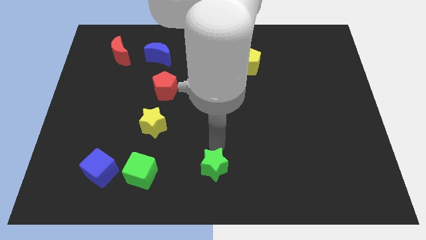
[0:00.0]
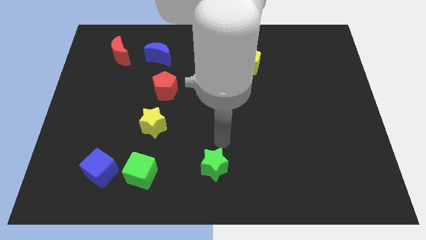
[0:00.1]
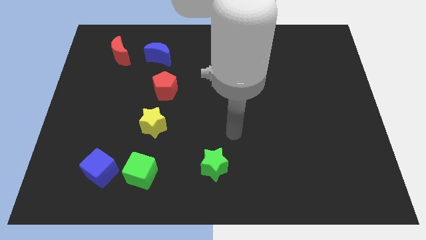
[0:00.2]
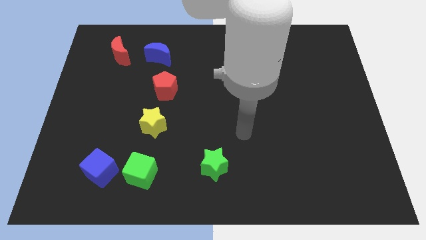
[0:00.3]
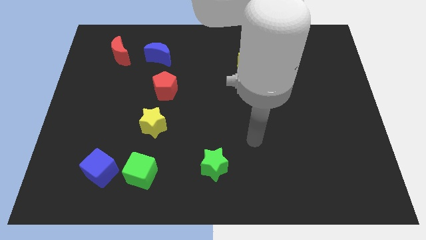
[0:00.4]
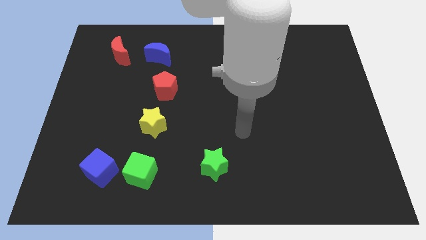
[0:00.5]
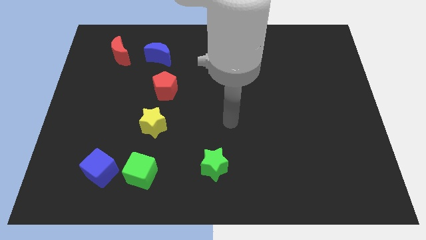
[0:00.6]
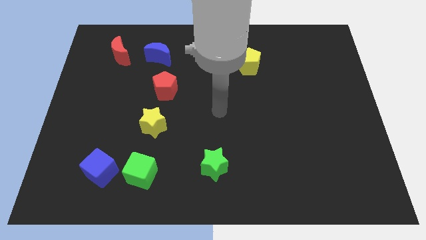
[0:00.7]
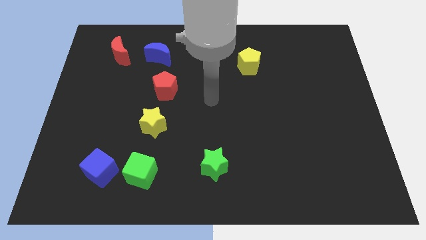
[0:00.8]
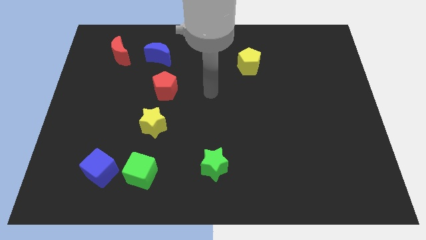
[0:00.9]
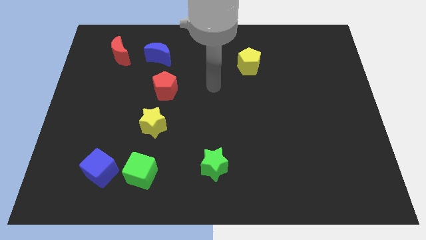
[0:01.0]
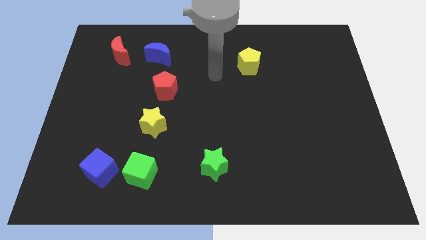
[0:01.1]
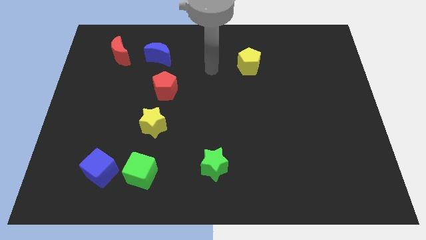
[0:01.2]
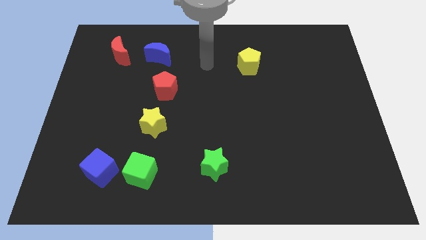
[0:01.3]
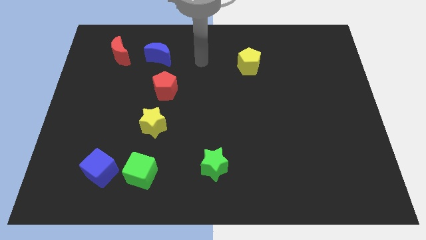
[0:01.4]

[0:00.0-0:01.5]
move your arm away from the green star

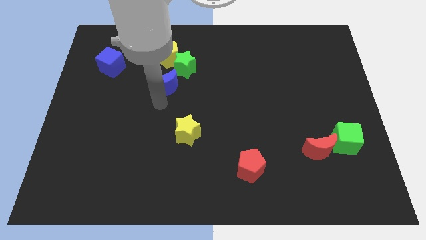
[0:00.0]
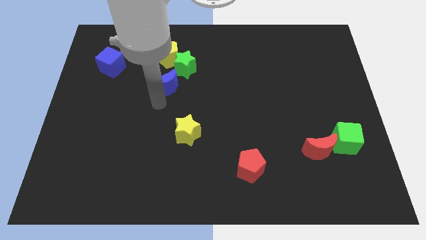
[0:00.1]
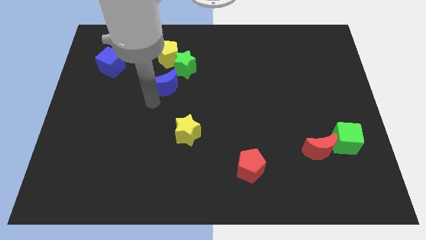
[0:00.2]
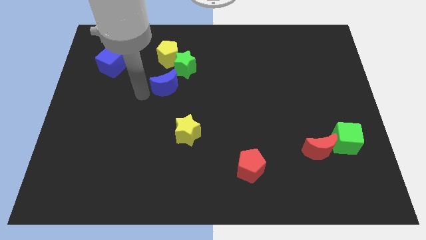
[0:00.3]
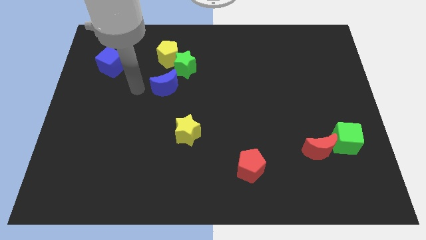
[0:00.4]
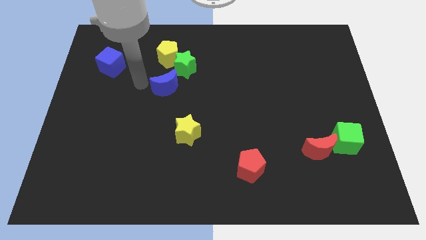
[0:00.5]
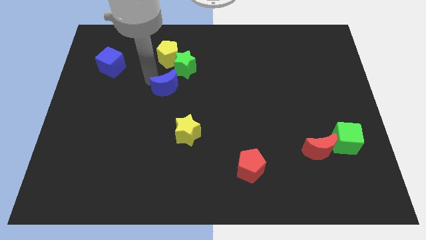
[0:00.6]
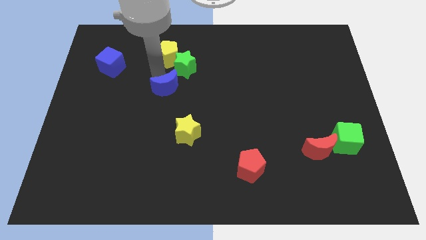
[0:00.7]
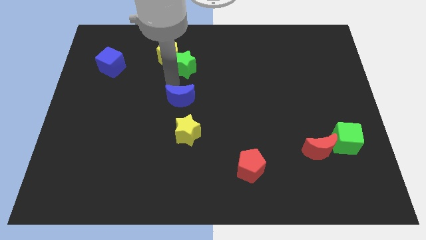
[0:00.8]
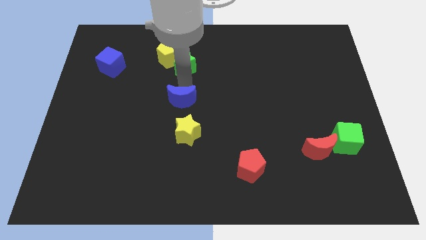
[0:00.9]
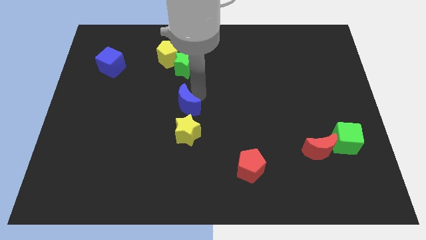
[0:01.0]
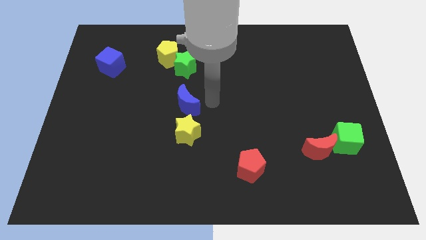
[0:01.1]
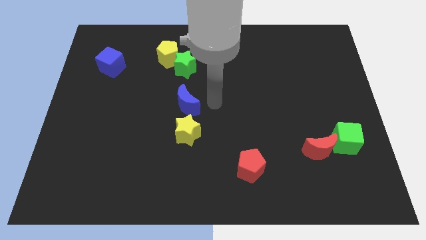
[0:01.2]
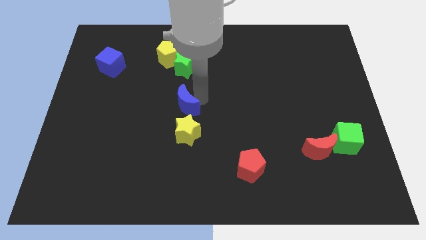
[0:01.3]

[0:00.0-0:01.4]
move the blue crescent vertically to the top of the yellow star

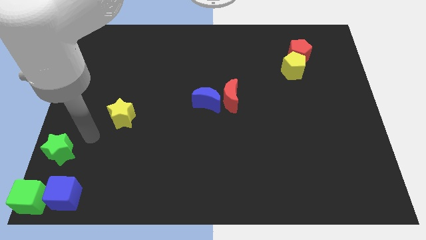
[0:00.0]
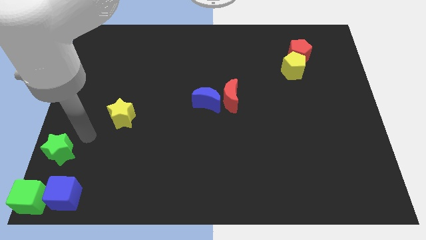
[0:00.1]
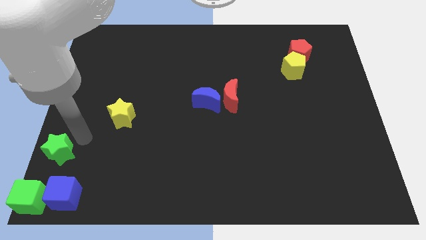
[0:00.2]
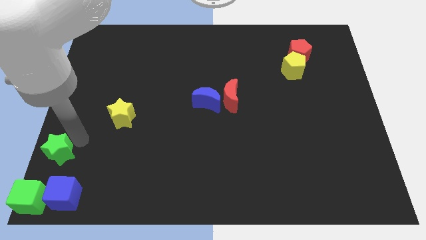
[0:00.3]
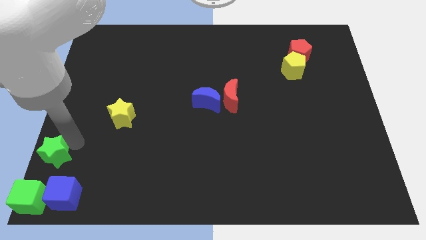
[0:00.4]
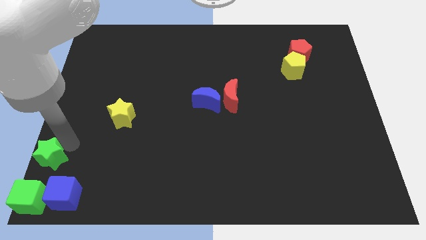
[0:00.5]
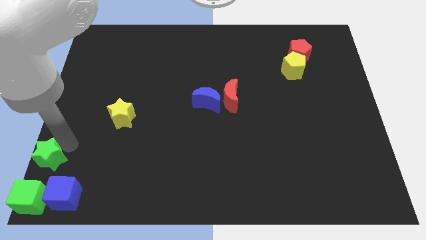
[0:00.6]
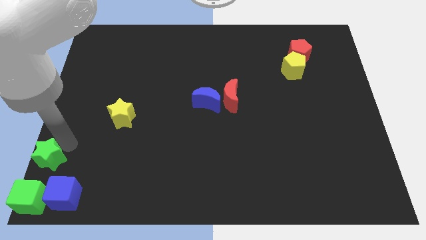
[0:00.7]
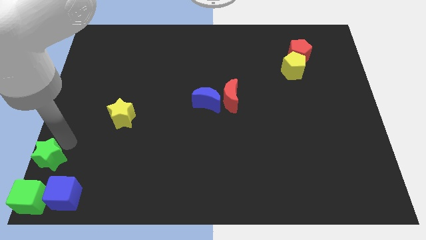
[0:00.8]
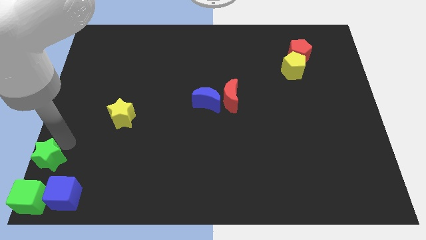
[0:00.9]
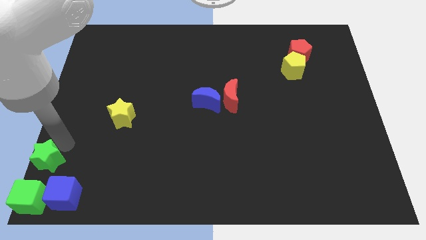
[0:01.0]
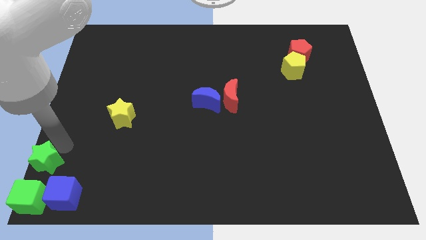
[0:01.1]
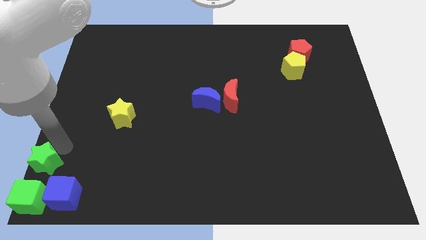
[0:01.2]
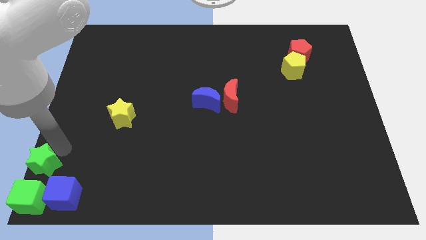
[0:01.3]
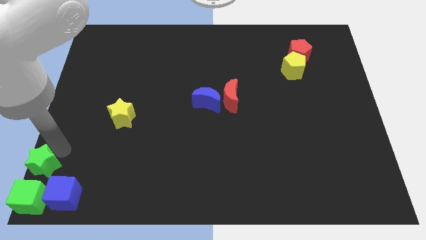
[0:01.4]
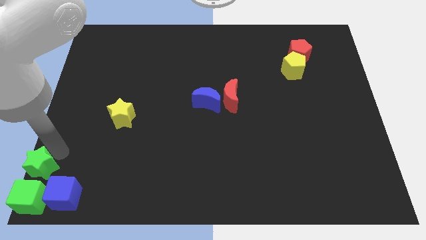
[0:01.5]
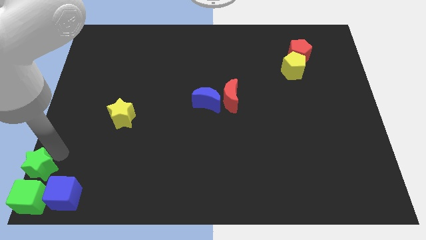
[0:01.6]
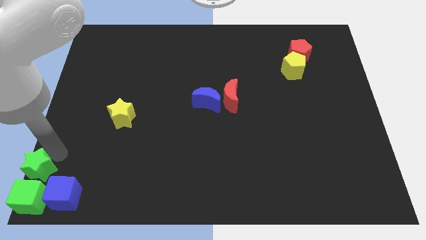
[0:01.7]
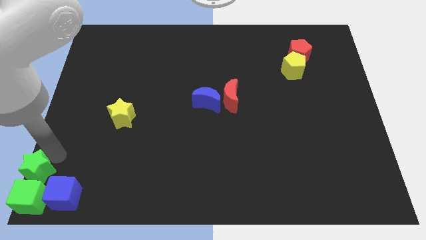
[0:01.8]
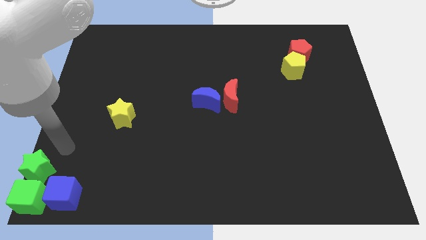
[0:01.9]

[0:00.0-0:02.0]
push the green star above the green cube

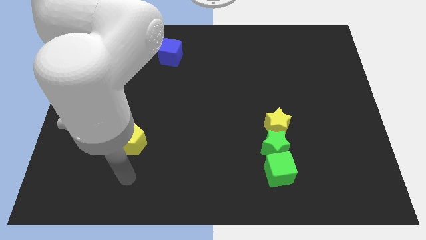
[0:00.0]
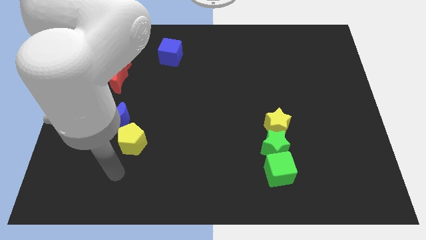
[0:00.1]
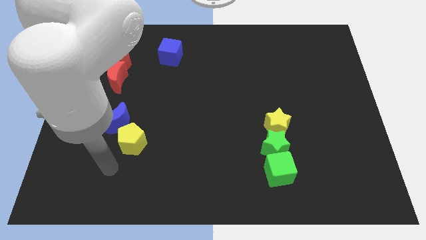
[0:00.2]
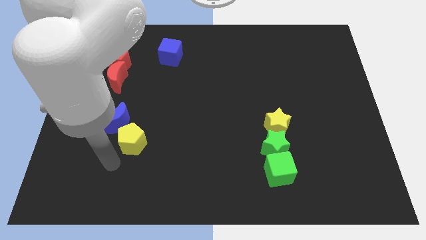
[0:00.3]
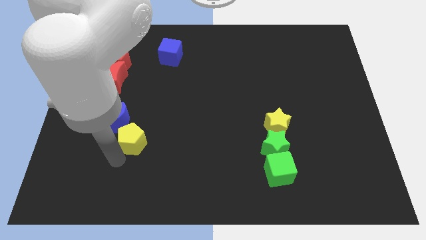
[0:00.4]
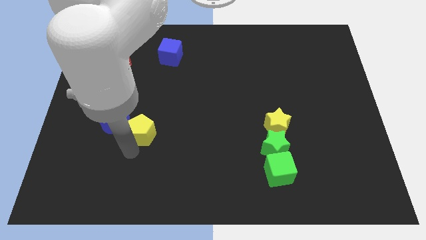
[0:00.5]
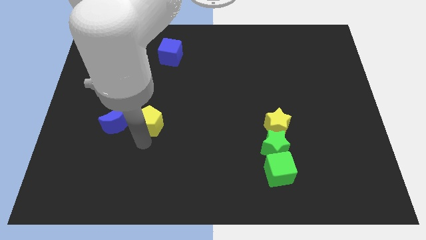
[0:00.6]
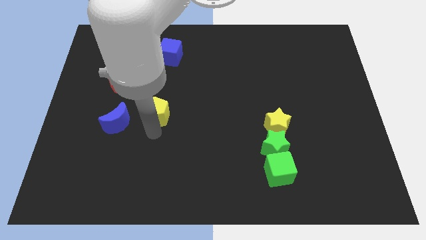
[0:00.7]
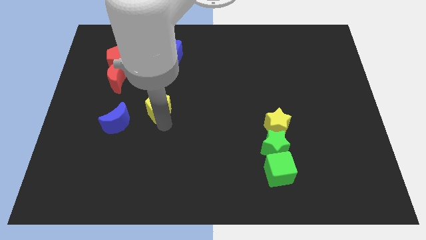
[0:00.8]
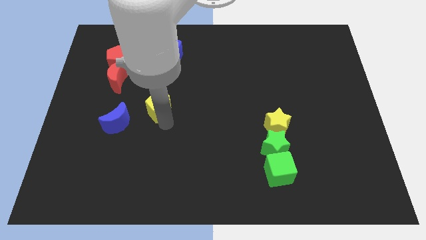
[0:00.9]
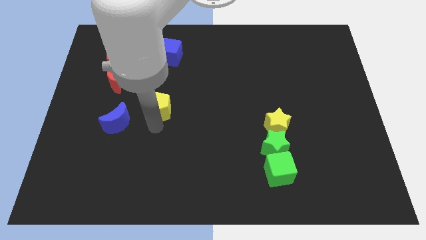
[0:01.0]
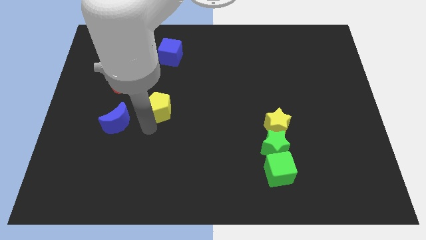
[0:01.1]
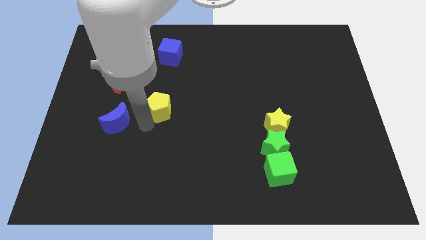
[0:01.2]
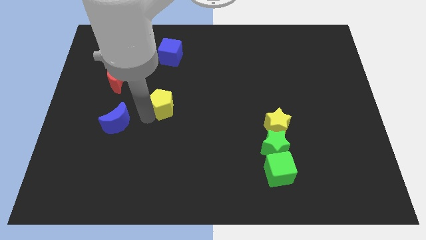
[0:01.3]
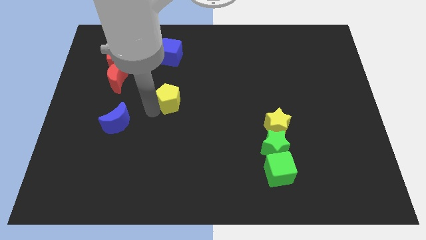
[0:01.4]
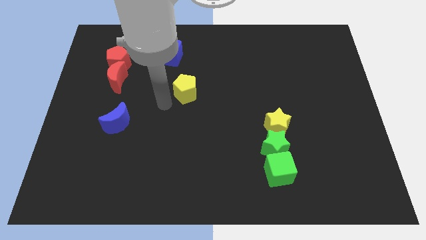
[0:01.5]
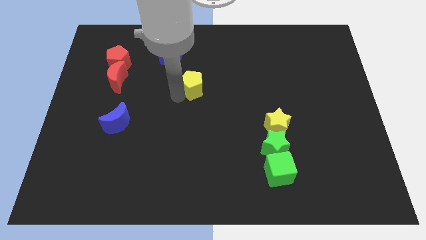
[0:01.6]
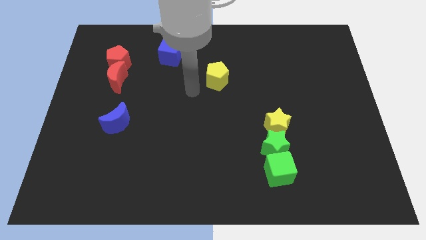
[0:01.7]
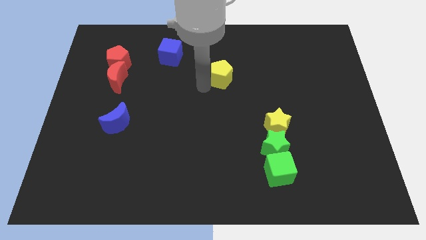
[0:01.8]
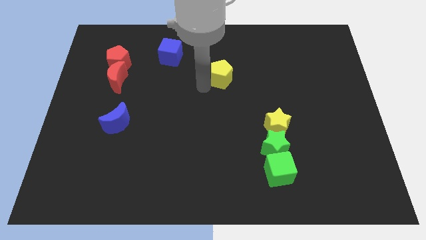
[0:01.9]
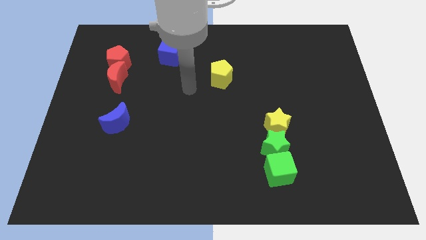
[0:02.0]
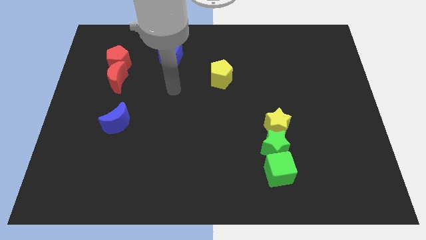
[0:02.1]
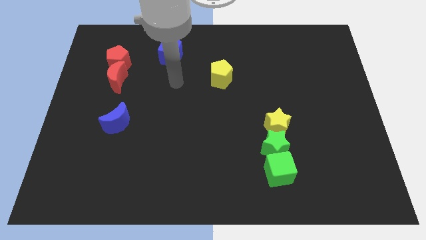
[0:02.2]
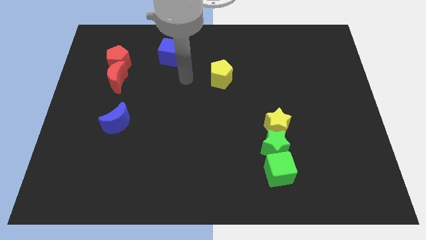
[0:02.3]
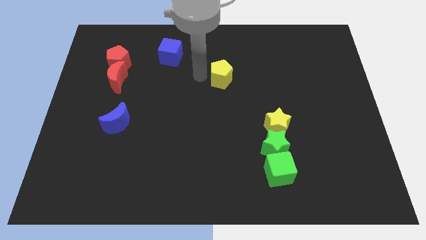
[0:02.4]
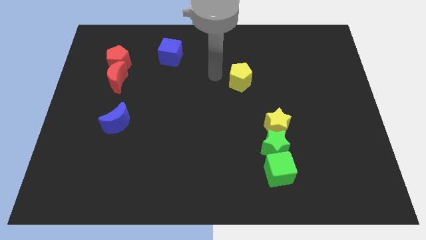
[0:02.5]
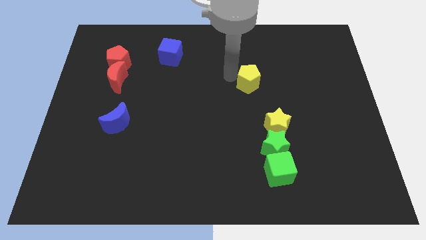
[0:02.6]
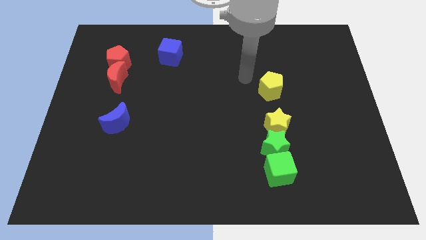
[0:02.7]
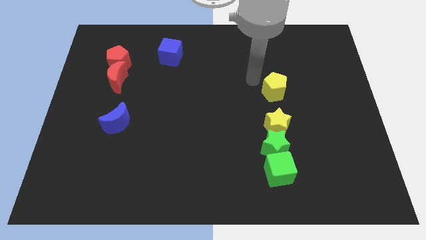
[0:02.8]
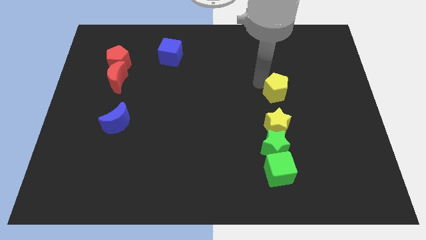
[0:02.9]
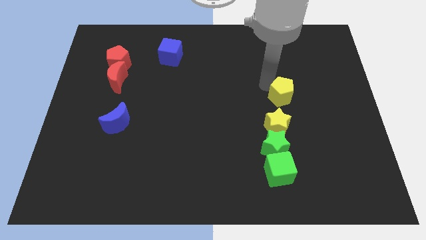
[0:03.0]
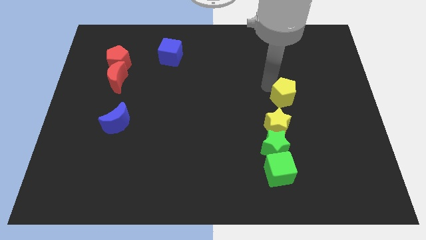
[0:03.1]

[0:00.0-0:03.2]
place the yellow pentagon above the yellow star

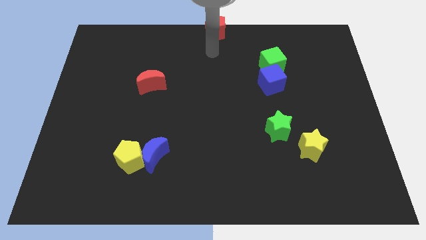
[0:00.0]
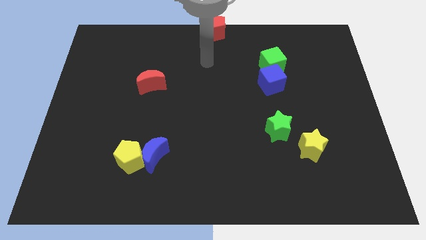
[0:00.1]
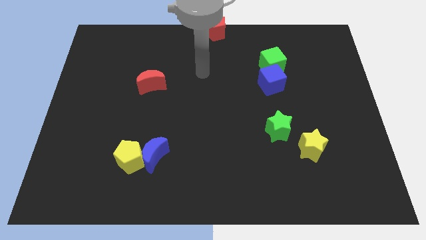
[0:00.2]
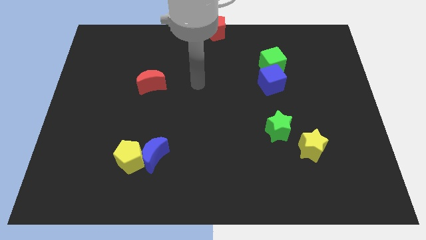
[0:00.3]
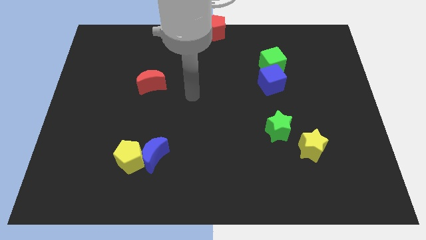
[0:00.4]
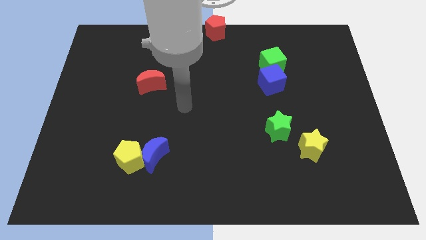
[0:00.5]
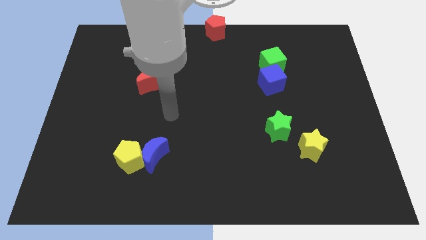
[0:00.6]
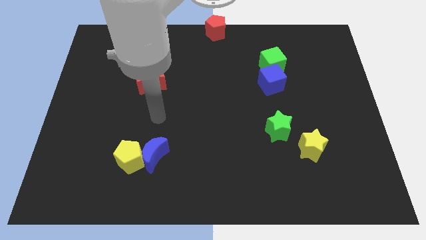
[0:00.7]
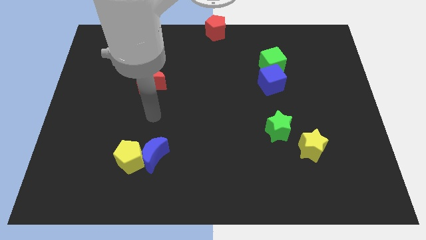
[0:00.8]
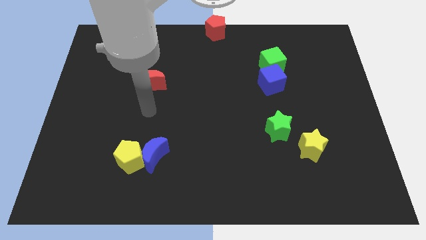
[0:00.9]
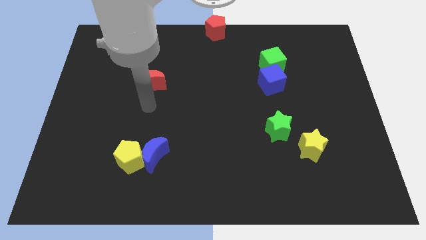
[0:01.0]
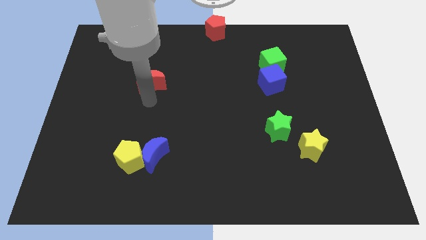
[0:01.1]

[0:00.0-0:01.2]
point the arm below the red moon
